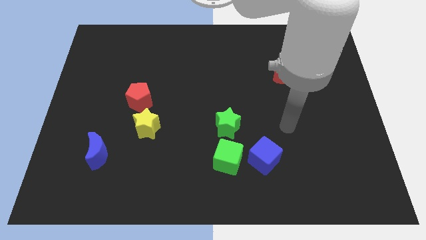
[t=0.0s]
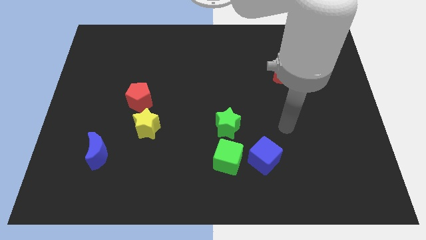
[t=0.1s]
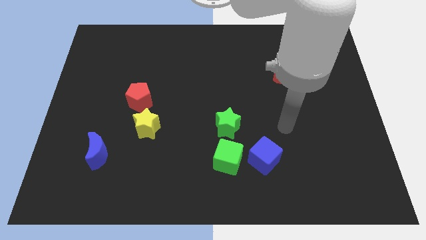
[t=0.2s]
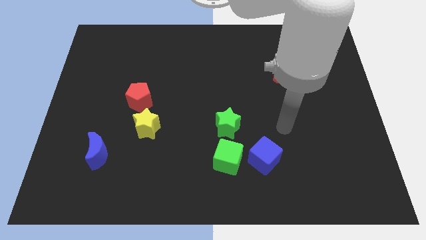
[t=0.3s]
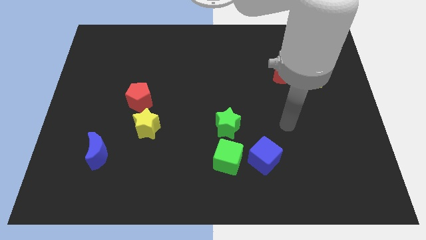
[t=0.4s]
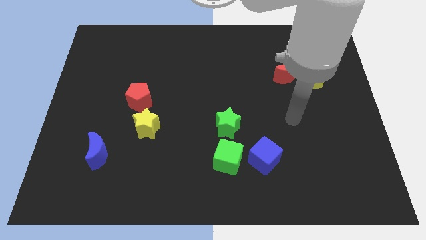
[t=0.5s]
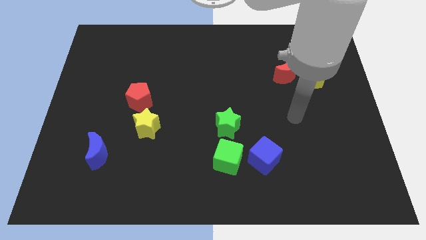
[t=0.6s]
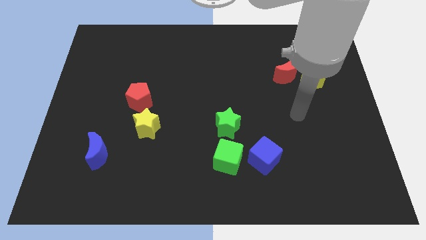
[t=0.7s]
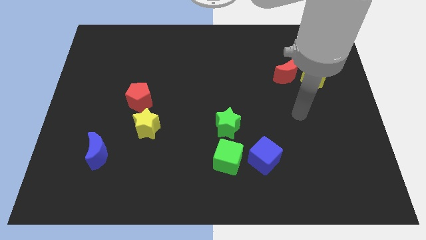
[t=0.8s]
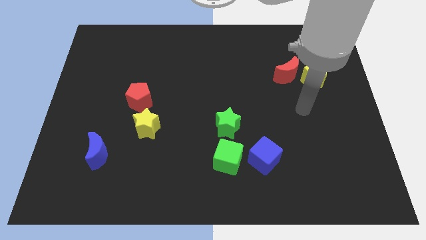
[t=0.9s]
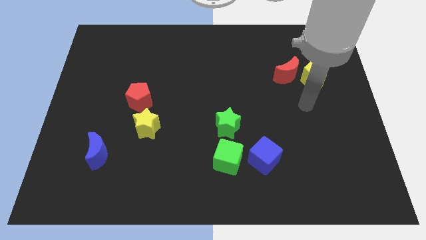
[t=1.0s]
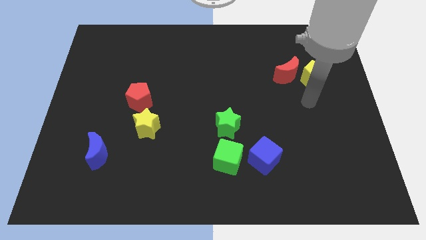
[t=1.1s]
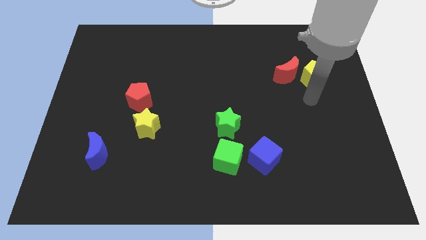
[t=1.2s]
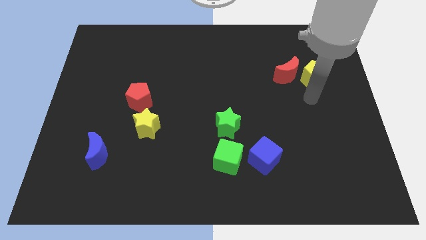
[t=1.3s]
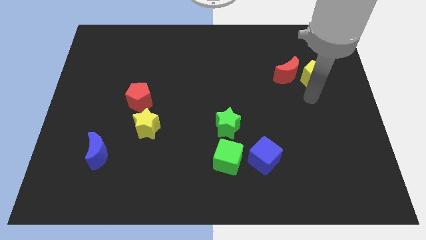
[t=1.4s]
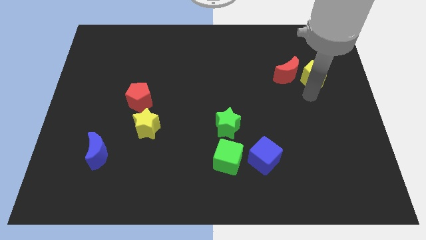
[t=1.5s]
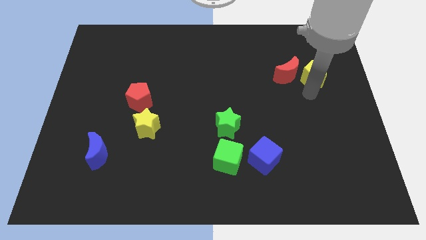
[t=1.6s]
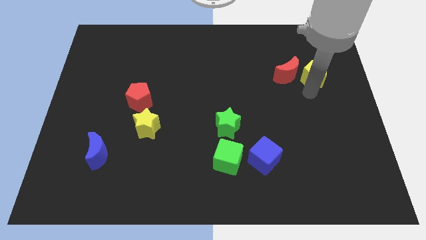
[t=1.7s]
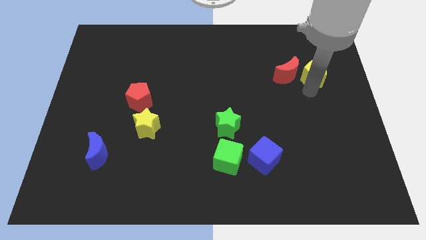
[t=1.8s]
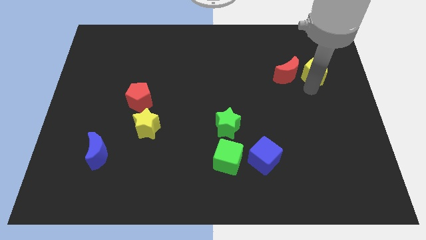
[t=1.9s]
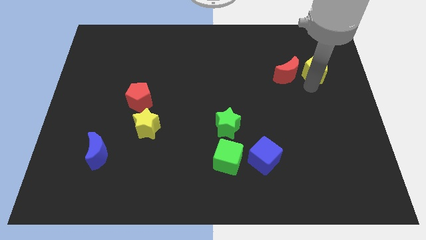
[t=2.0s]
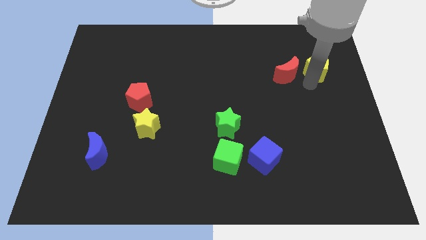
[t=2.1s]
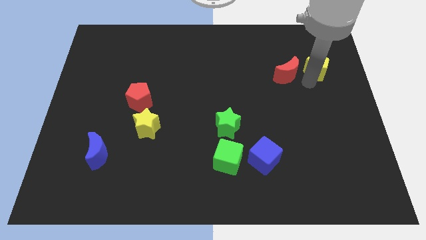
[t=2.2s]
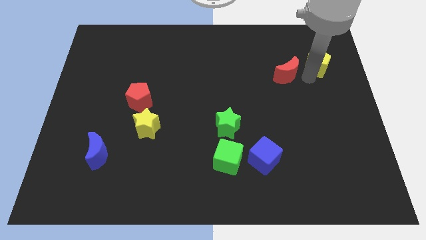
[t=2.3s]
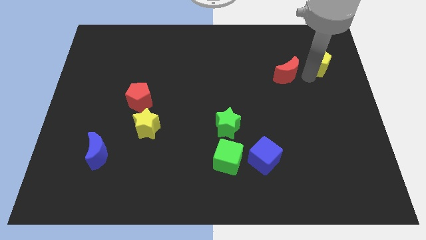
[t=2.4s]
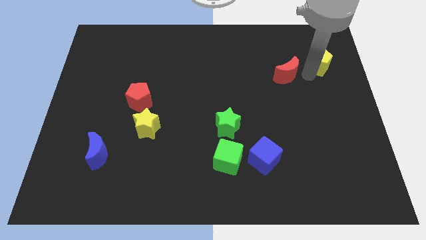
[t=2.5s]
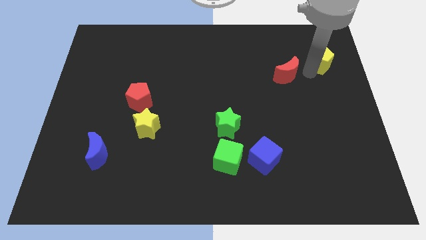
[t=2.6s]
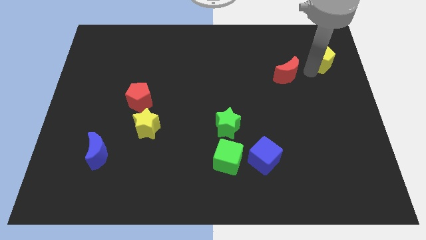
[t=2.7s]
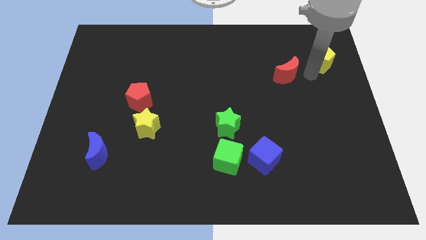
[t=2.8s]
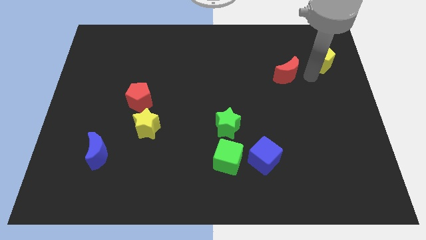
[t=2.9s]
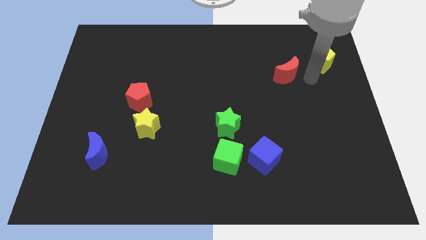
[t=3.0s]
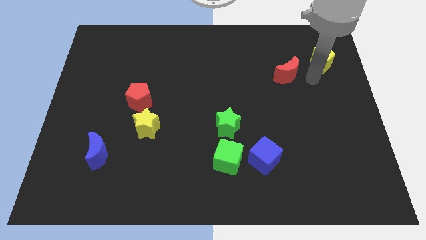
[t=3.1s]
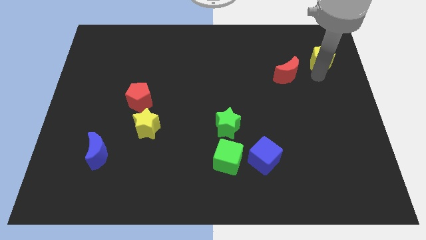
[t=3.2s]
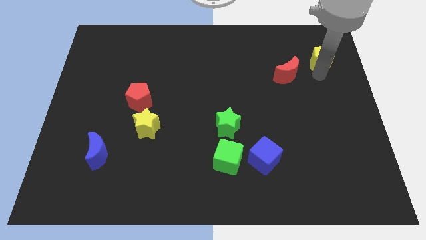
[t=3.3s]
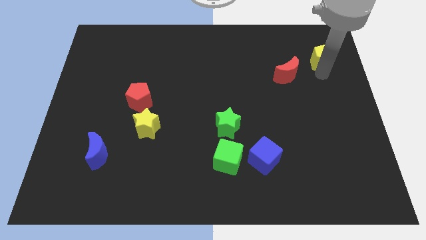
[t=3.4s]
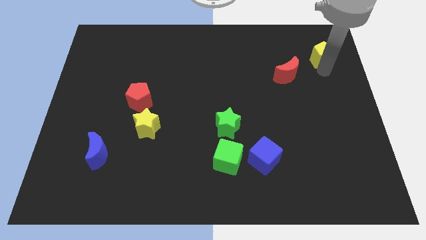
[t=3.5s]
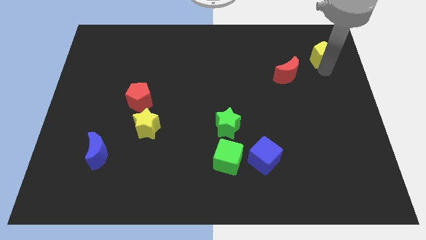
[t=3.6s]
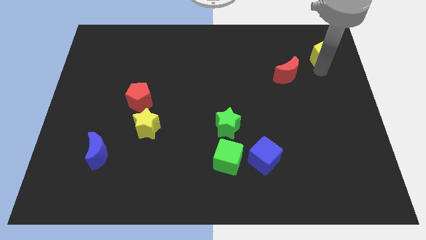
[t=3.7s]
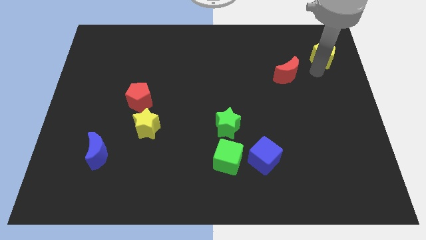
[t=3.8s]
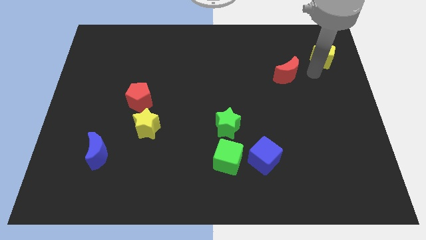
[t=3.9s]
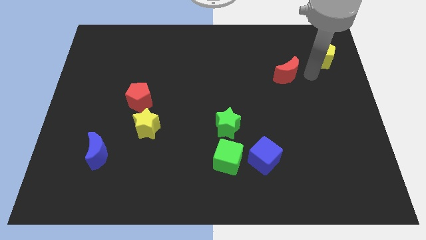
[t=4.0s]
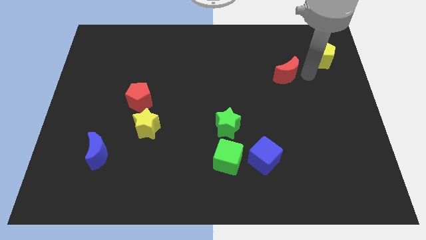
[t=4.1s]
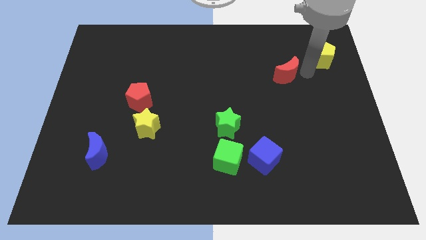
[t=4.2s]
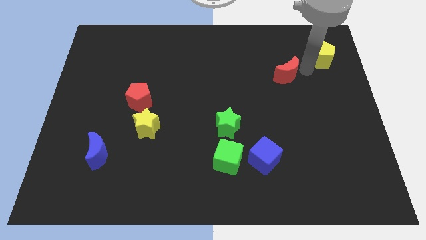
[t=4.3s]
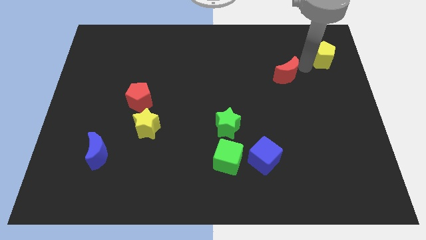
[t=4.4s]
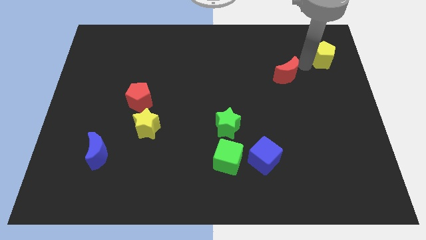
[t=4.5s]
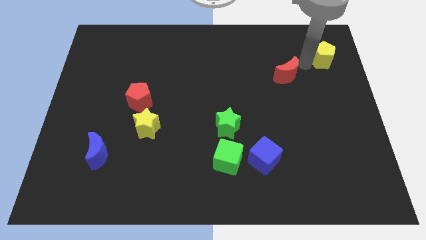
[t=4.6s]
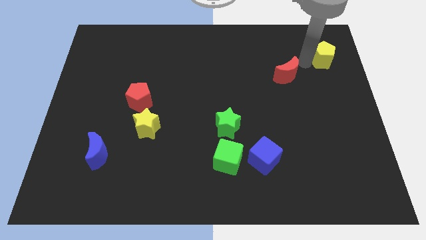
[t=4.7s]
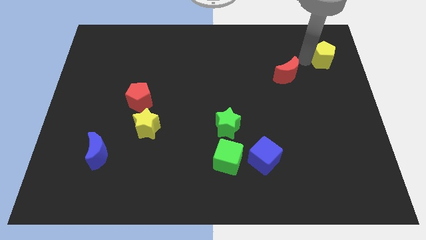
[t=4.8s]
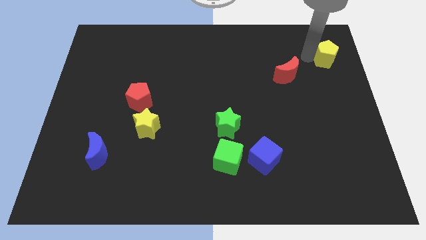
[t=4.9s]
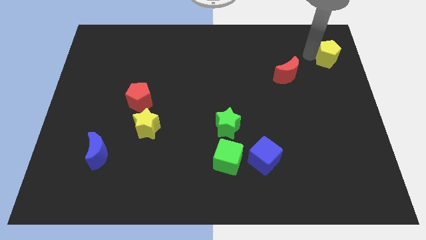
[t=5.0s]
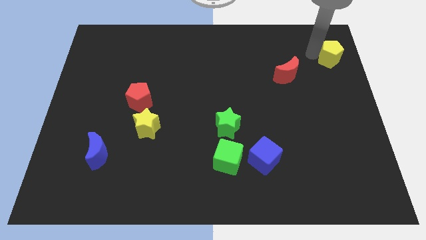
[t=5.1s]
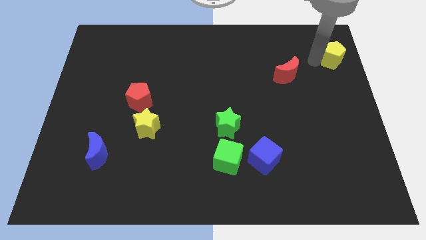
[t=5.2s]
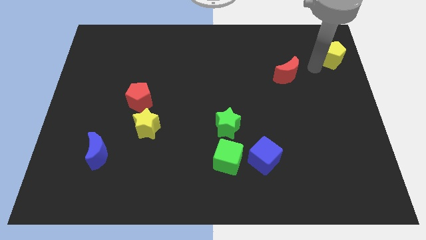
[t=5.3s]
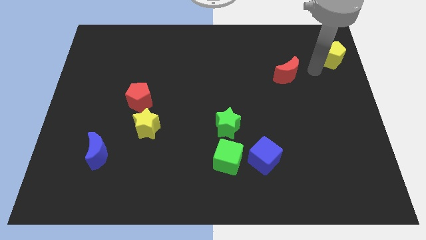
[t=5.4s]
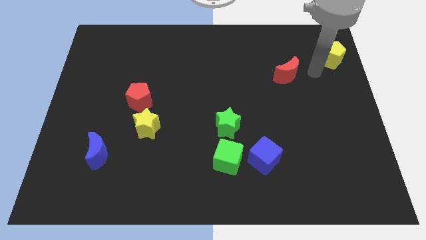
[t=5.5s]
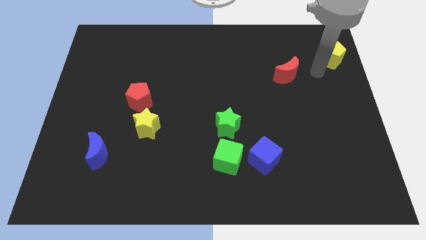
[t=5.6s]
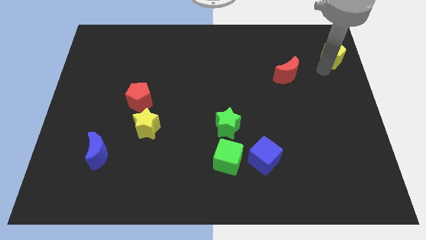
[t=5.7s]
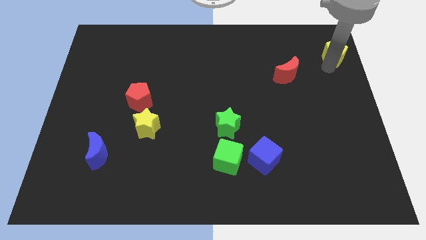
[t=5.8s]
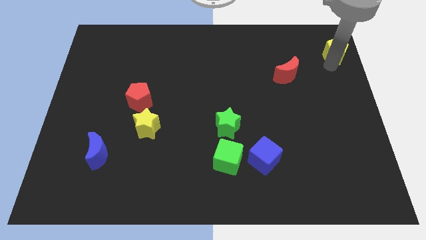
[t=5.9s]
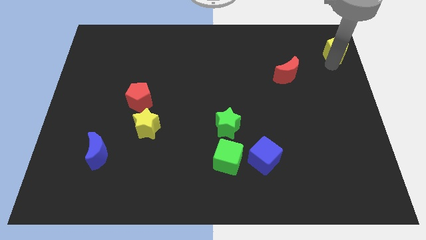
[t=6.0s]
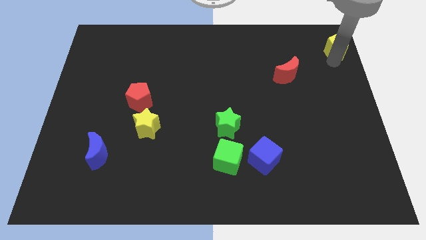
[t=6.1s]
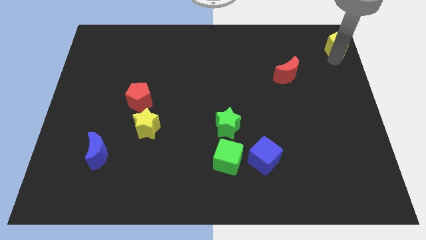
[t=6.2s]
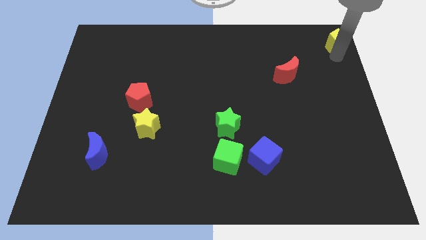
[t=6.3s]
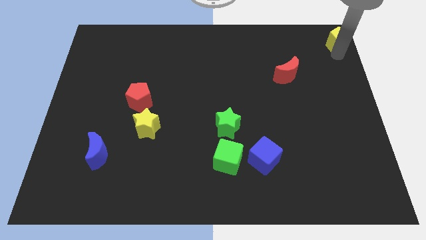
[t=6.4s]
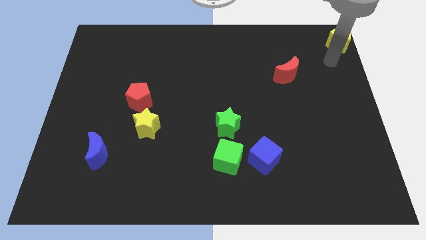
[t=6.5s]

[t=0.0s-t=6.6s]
push the yellow pentagon to the top right corner of the board

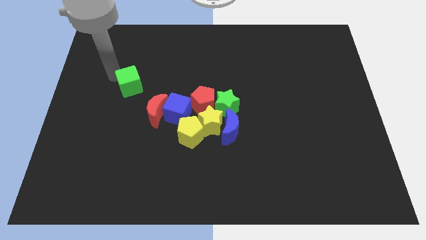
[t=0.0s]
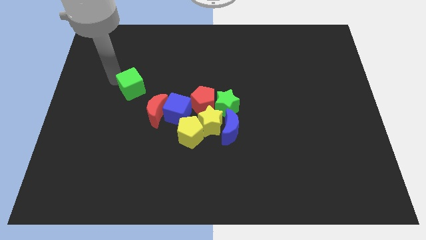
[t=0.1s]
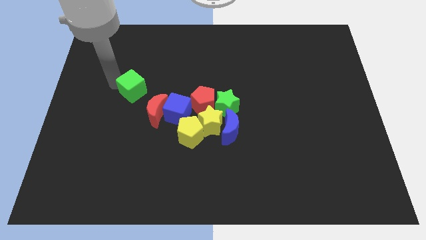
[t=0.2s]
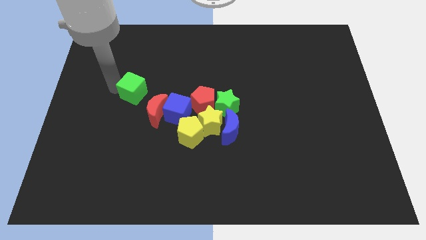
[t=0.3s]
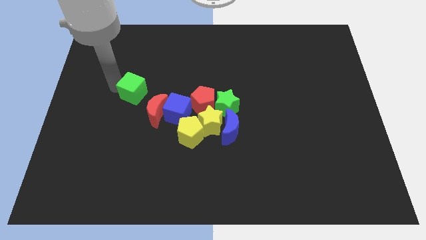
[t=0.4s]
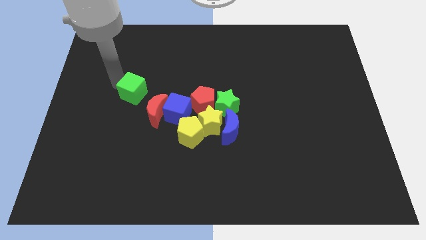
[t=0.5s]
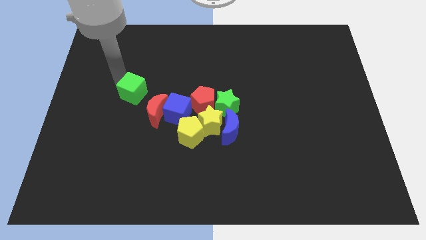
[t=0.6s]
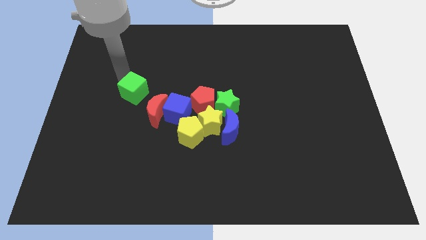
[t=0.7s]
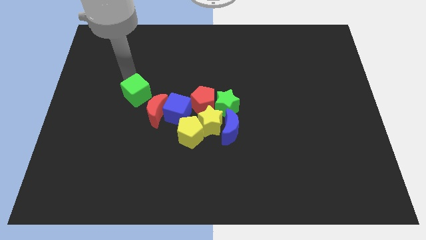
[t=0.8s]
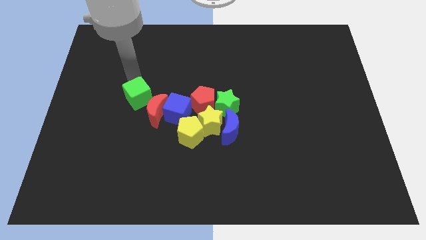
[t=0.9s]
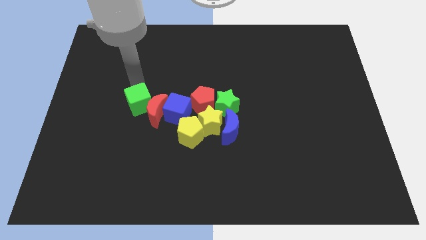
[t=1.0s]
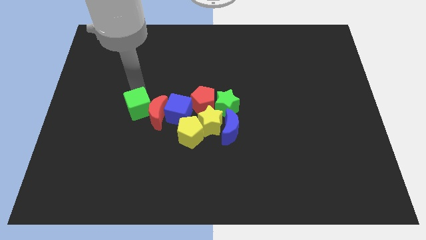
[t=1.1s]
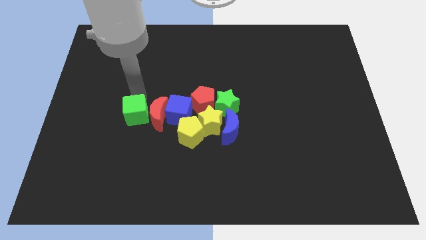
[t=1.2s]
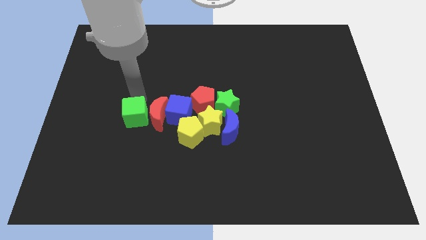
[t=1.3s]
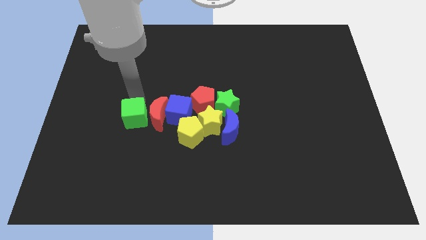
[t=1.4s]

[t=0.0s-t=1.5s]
put the green cube left to the red moon

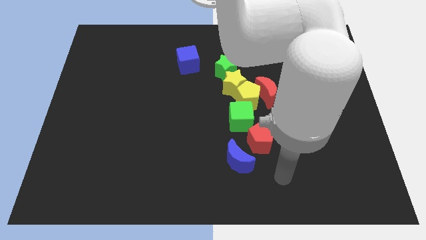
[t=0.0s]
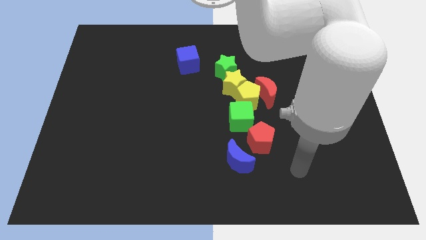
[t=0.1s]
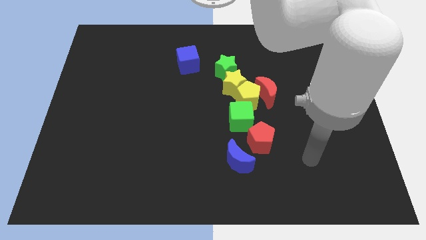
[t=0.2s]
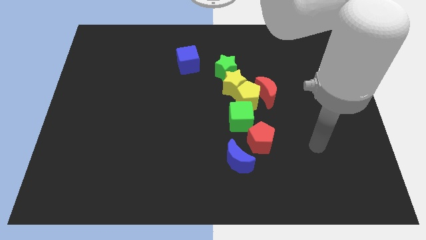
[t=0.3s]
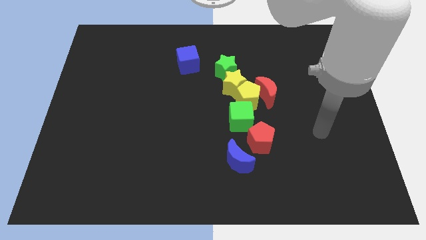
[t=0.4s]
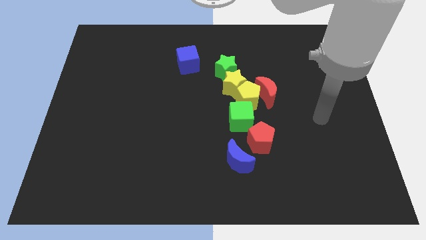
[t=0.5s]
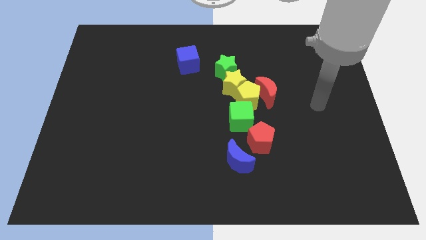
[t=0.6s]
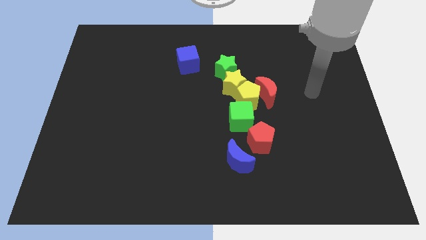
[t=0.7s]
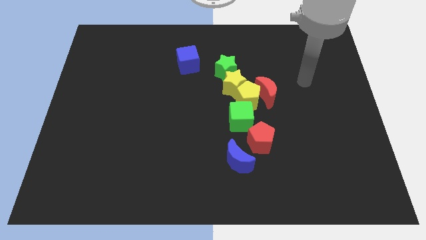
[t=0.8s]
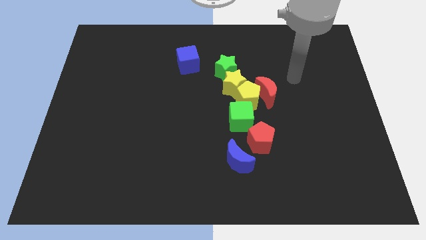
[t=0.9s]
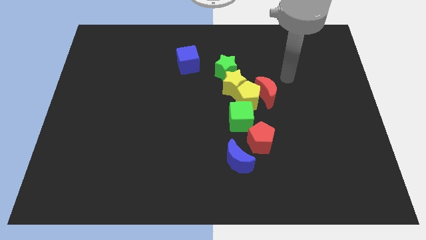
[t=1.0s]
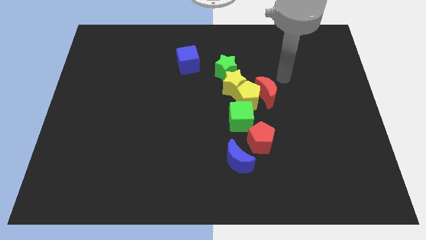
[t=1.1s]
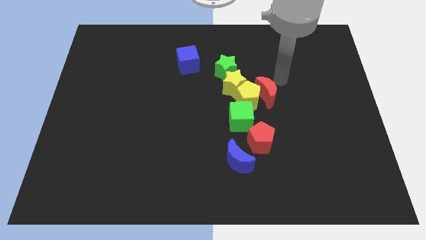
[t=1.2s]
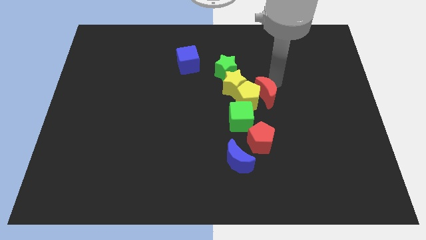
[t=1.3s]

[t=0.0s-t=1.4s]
place the arm towards the red moon
